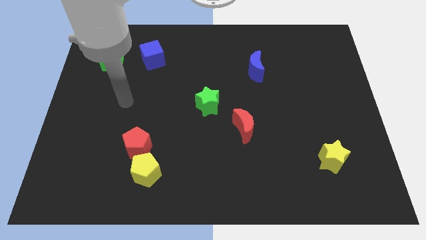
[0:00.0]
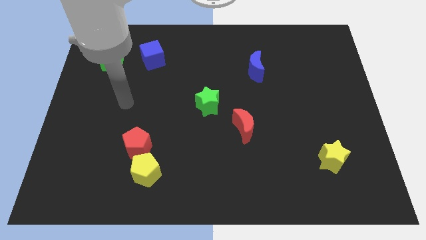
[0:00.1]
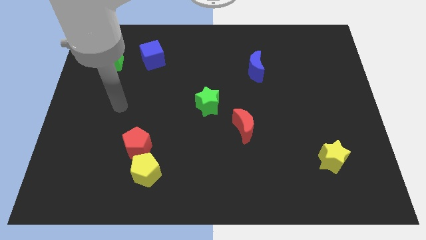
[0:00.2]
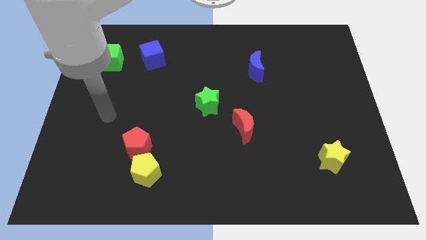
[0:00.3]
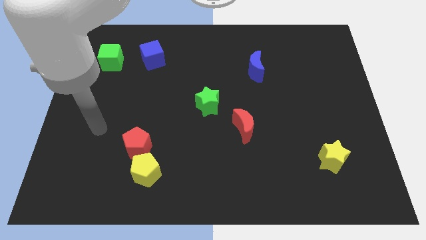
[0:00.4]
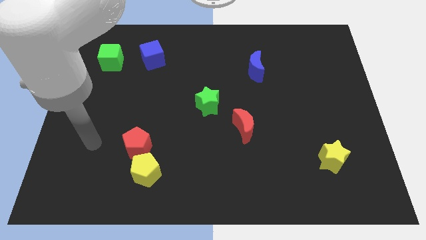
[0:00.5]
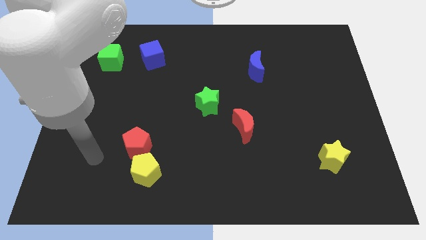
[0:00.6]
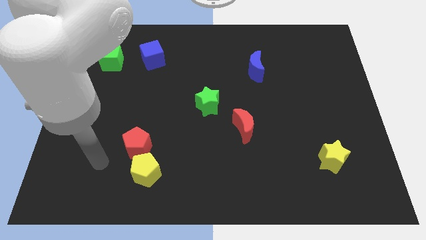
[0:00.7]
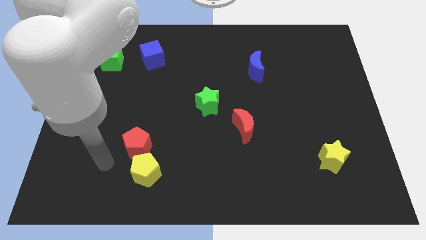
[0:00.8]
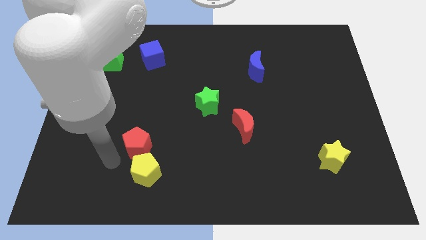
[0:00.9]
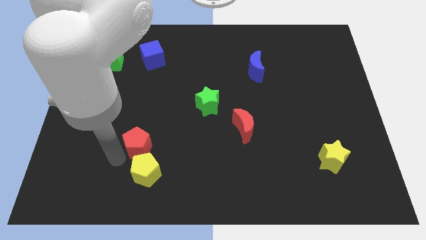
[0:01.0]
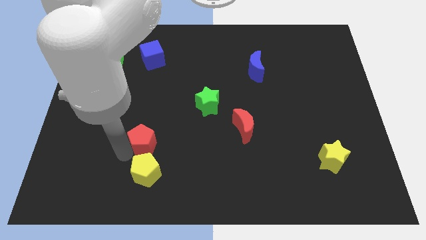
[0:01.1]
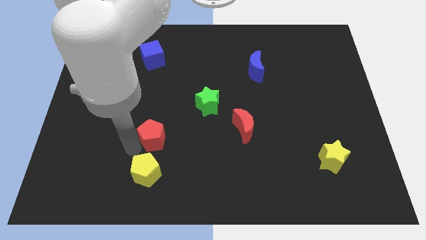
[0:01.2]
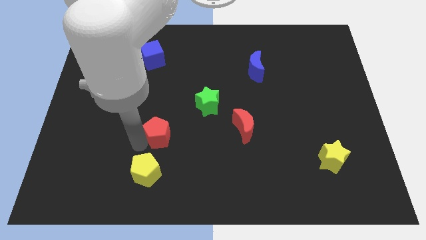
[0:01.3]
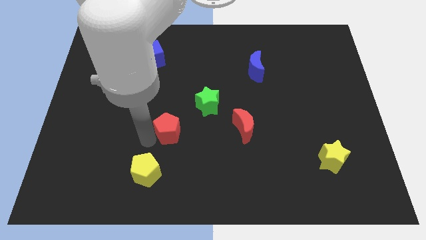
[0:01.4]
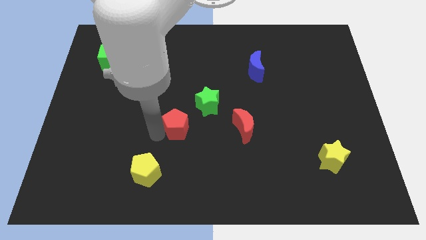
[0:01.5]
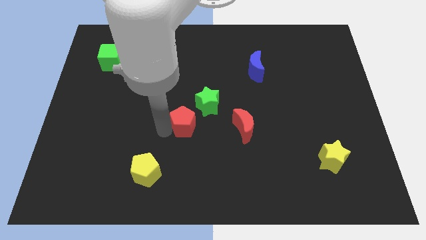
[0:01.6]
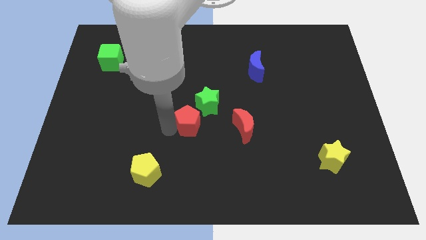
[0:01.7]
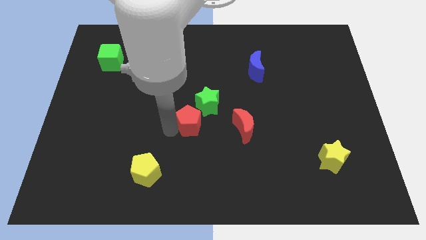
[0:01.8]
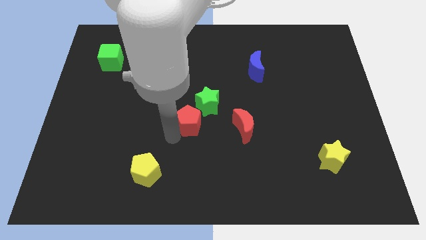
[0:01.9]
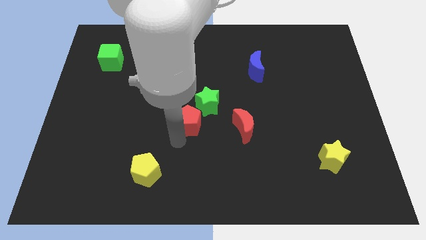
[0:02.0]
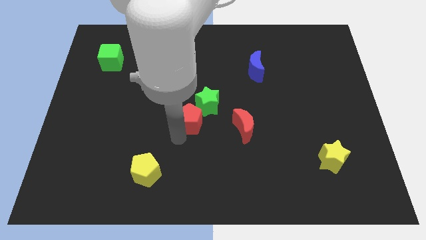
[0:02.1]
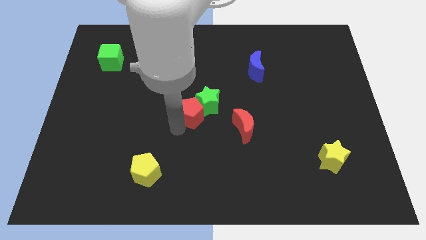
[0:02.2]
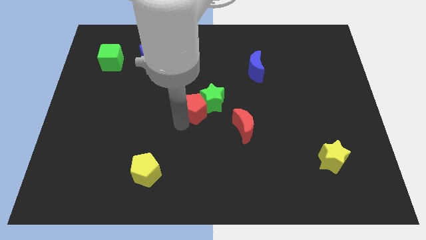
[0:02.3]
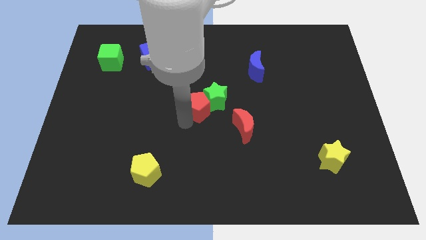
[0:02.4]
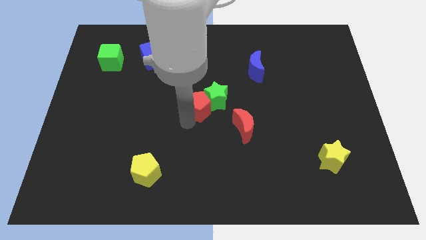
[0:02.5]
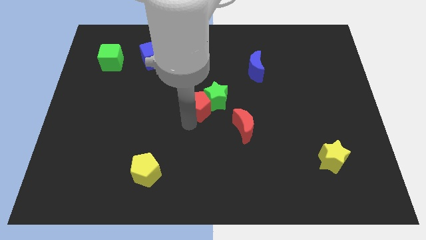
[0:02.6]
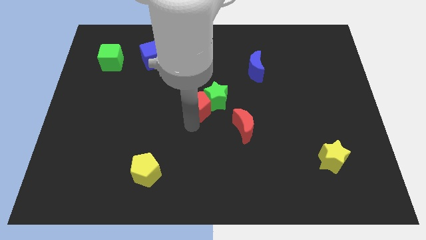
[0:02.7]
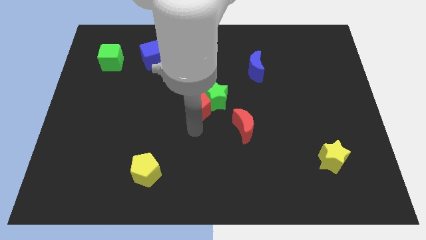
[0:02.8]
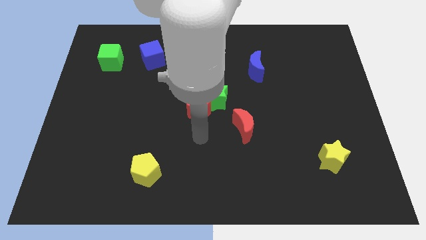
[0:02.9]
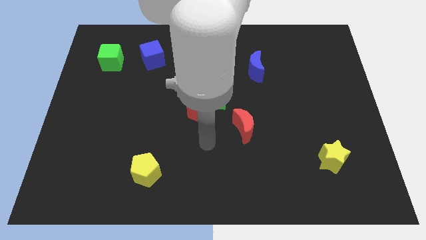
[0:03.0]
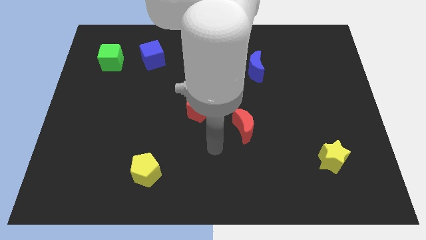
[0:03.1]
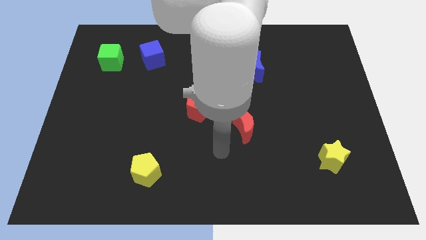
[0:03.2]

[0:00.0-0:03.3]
push the red pentagon into the green star

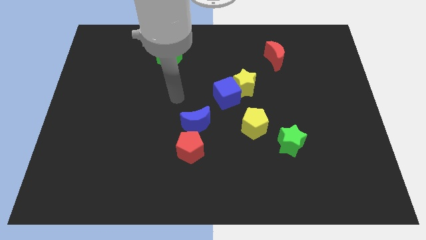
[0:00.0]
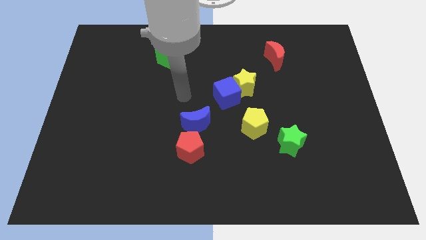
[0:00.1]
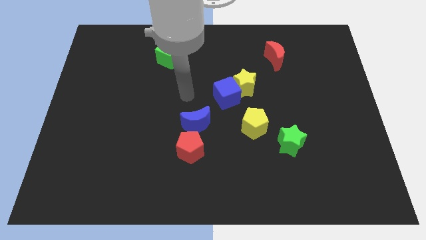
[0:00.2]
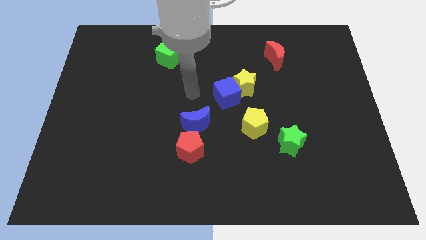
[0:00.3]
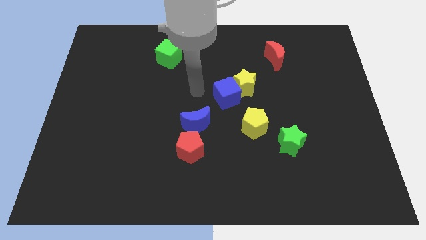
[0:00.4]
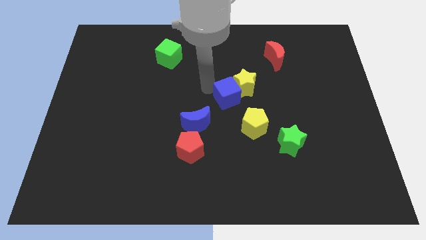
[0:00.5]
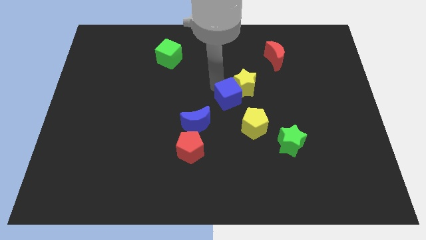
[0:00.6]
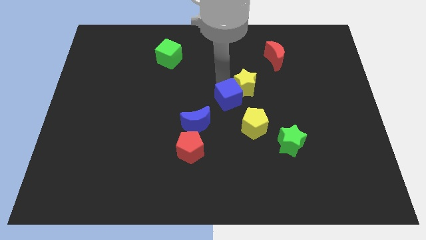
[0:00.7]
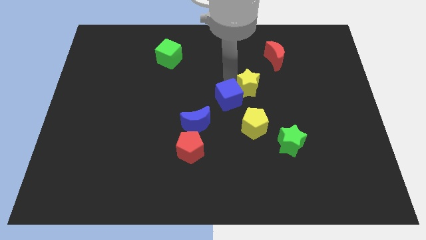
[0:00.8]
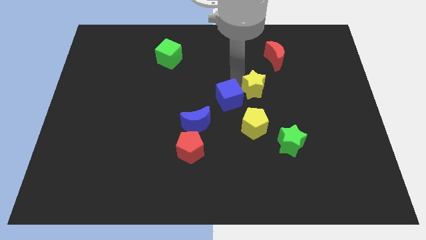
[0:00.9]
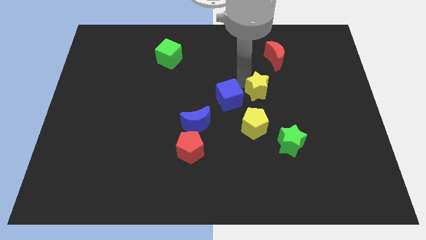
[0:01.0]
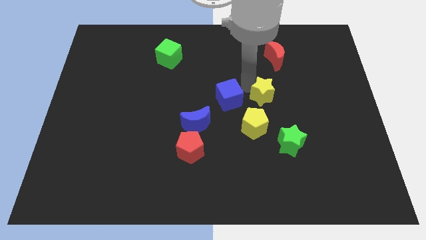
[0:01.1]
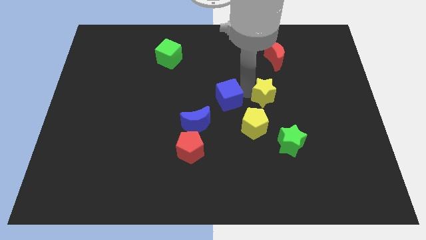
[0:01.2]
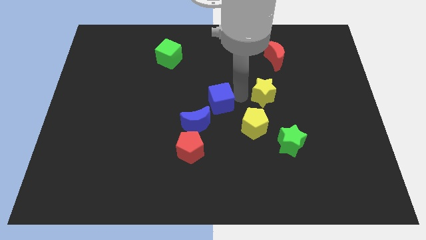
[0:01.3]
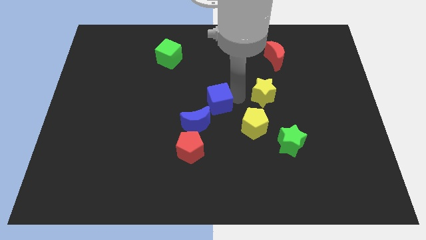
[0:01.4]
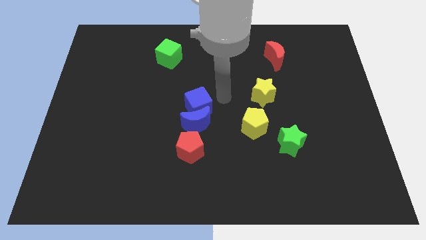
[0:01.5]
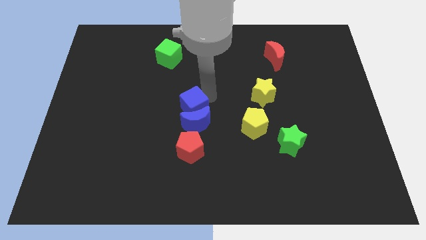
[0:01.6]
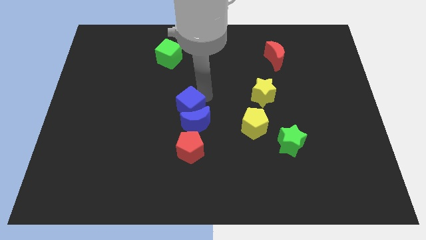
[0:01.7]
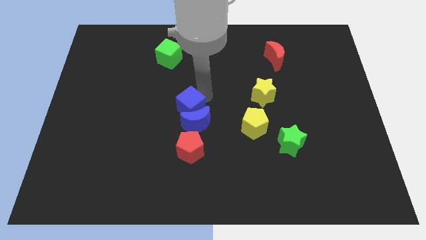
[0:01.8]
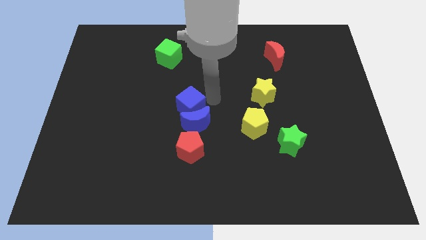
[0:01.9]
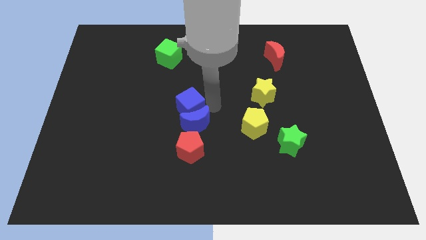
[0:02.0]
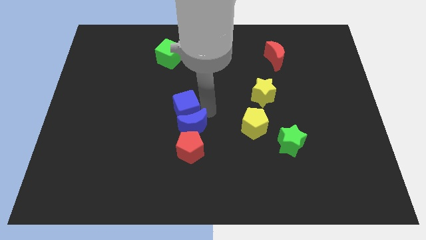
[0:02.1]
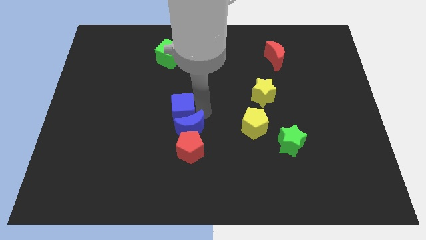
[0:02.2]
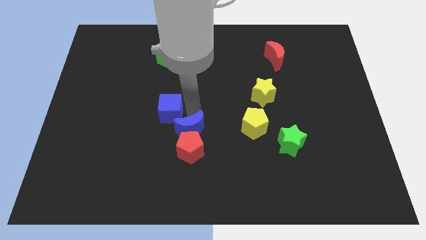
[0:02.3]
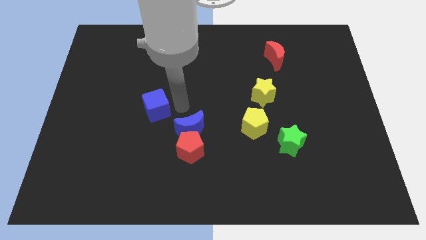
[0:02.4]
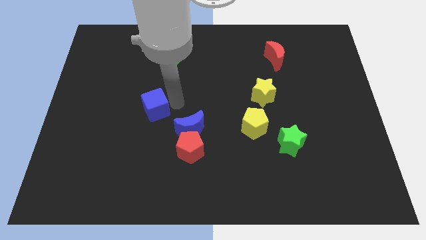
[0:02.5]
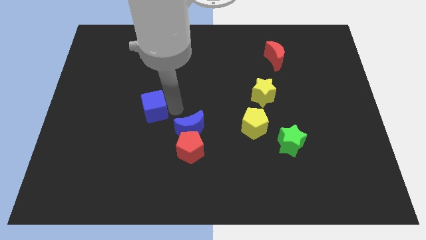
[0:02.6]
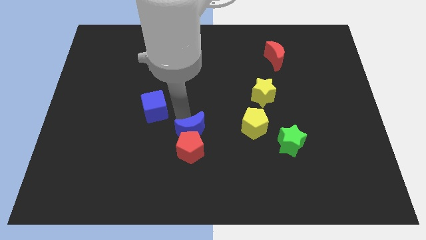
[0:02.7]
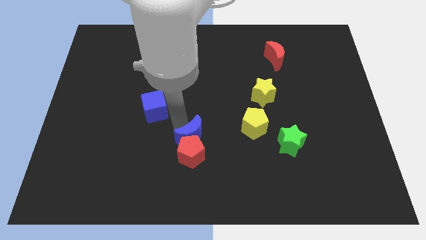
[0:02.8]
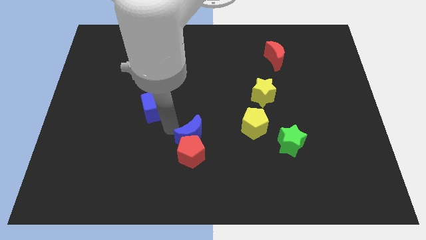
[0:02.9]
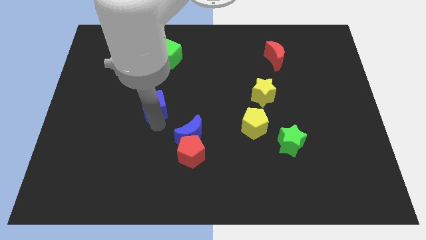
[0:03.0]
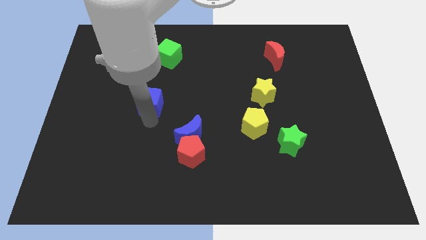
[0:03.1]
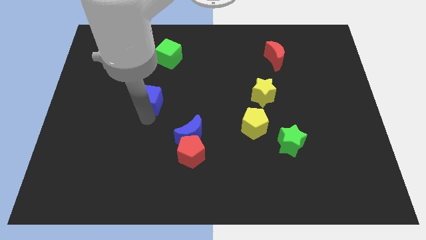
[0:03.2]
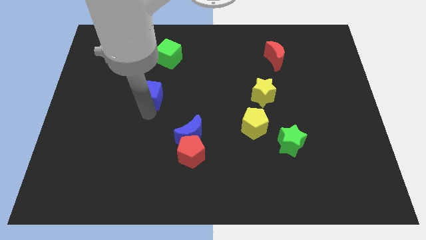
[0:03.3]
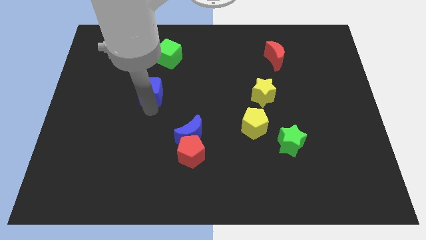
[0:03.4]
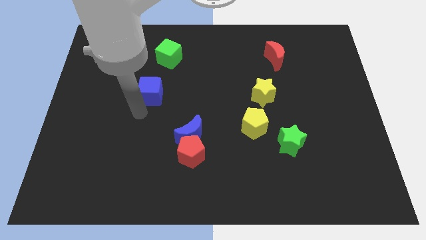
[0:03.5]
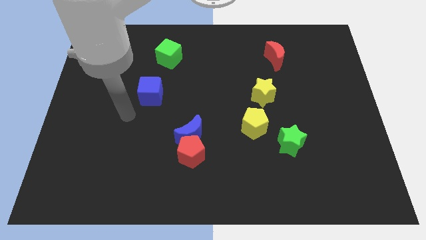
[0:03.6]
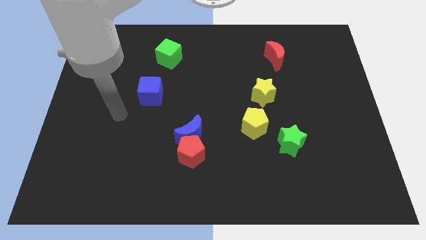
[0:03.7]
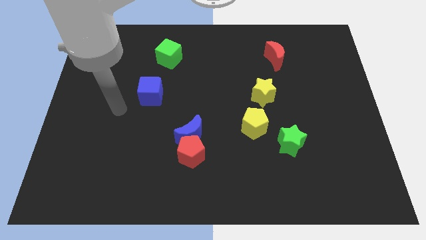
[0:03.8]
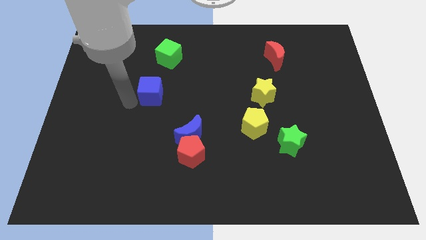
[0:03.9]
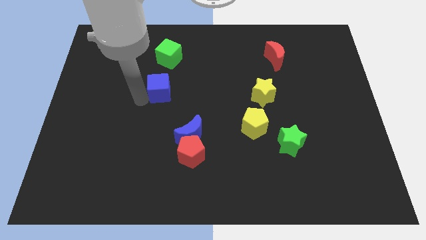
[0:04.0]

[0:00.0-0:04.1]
separate blue cube from yellow star

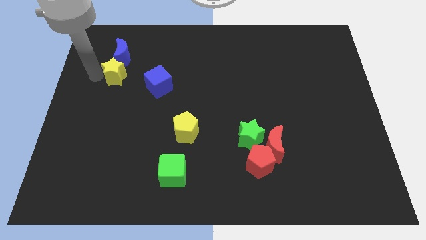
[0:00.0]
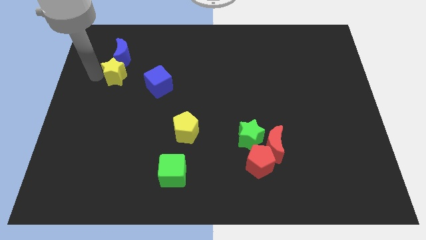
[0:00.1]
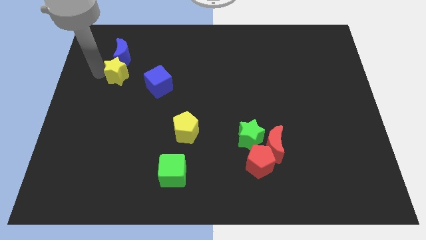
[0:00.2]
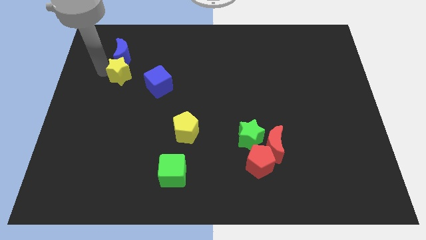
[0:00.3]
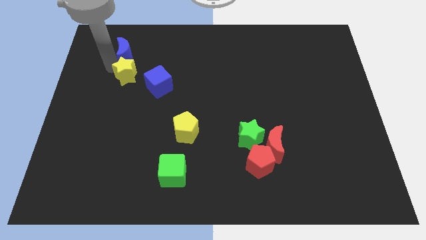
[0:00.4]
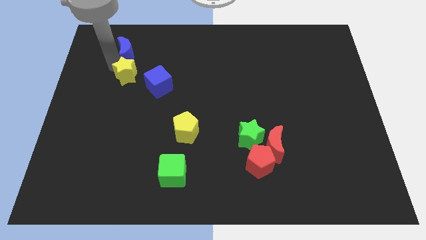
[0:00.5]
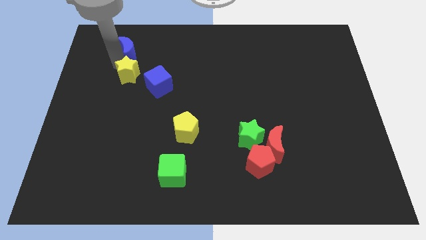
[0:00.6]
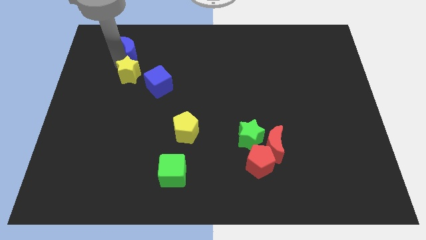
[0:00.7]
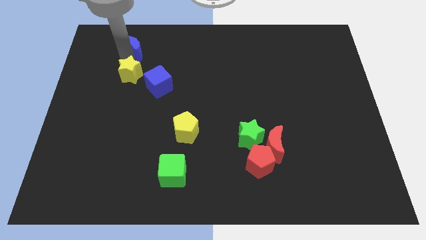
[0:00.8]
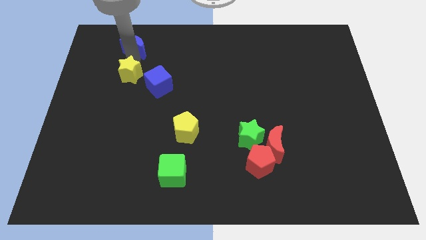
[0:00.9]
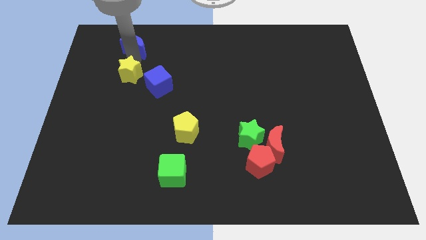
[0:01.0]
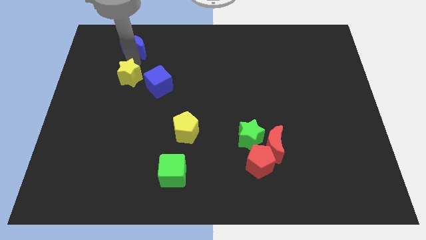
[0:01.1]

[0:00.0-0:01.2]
move the yellow star towards the blue cube

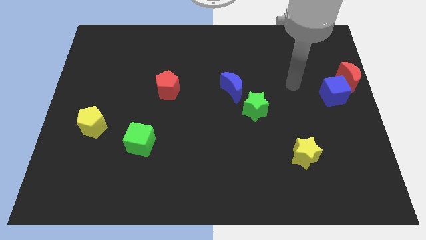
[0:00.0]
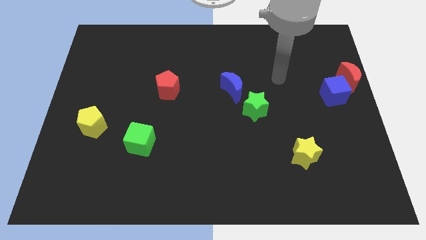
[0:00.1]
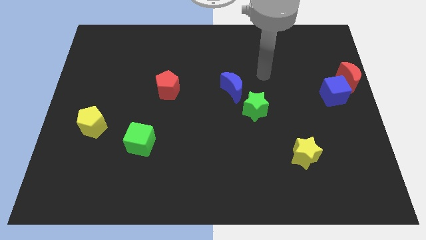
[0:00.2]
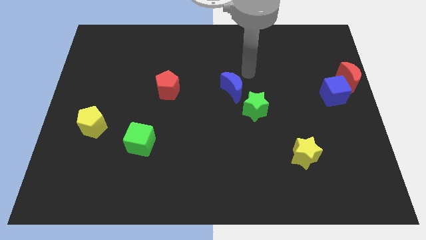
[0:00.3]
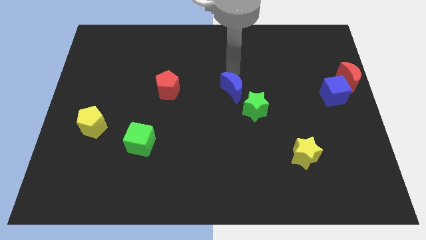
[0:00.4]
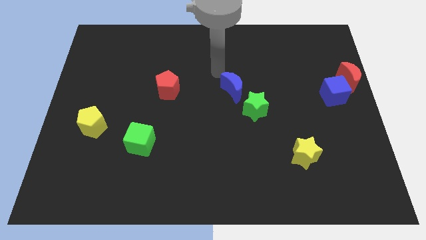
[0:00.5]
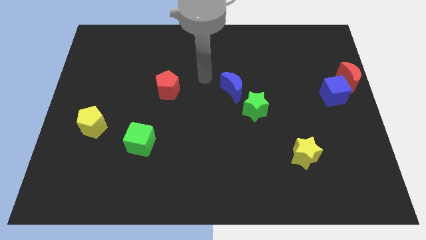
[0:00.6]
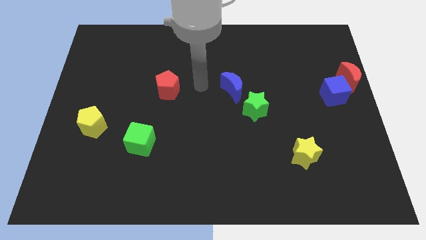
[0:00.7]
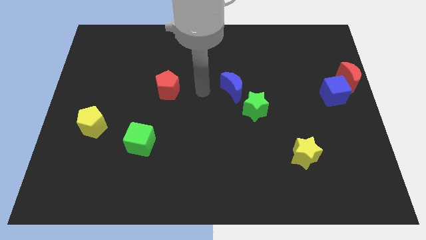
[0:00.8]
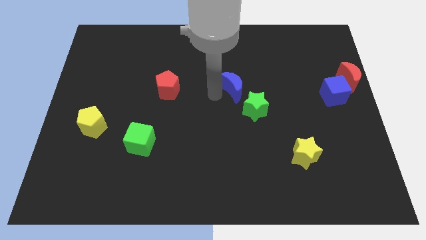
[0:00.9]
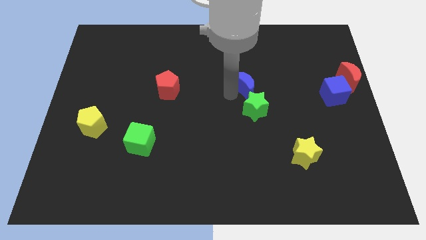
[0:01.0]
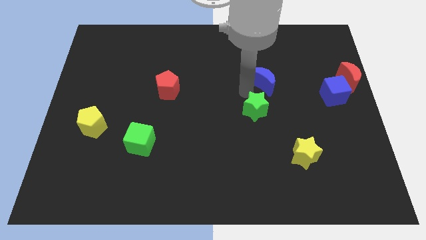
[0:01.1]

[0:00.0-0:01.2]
push the blue crescent to the top of the green star
